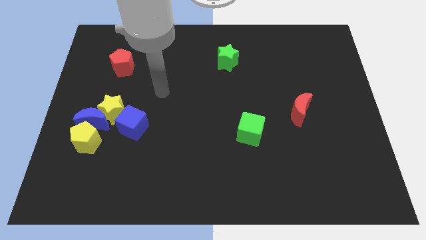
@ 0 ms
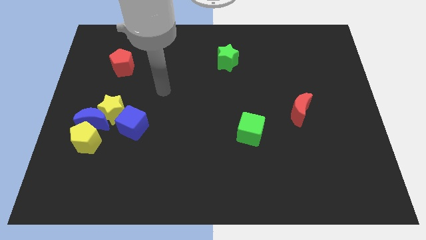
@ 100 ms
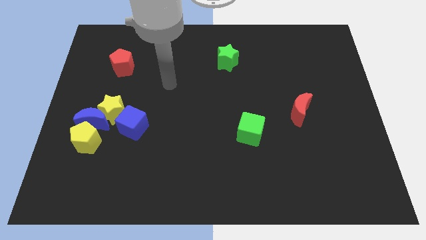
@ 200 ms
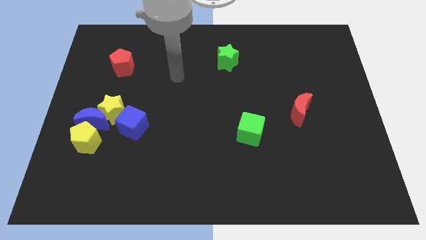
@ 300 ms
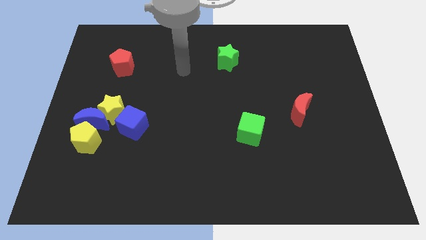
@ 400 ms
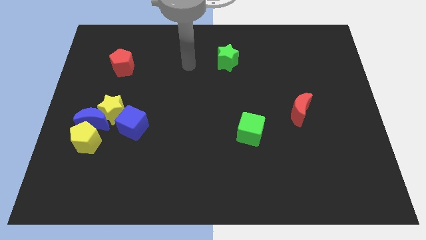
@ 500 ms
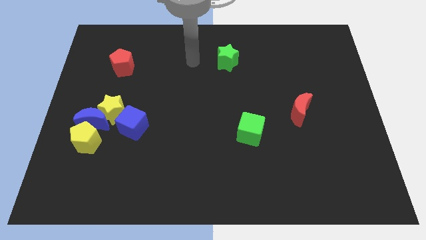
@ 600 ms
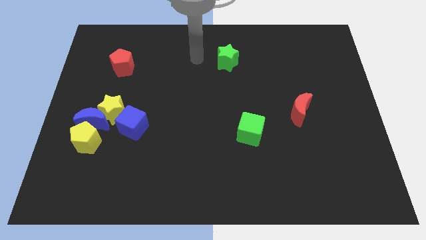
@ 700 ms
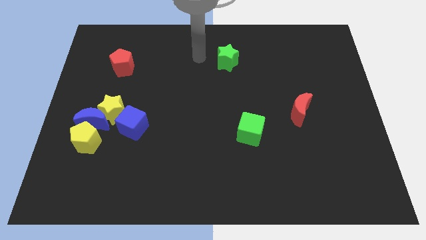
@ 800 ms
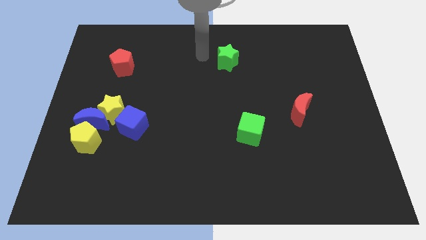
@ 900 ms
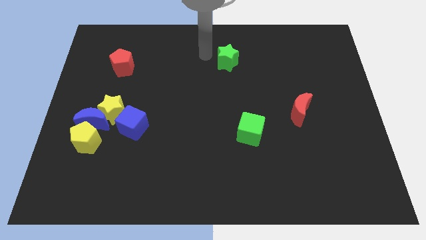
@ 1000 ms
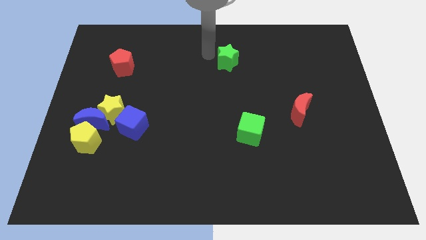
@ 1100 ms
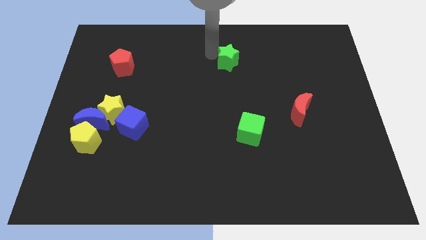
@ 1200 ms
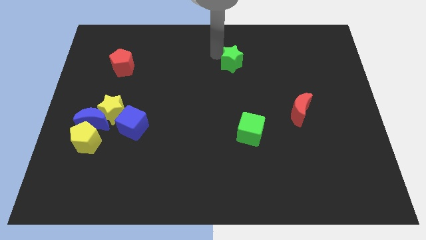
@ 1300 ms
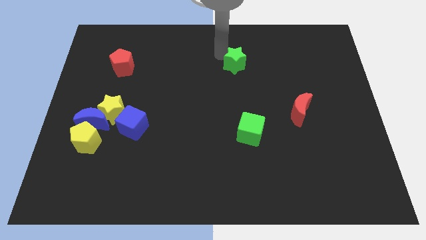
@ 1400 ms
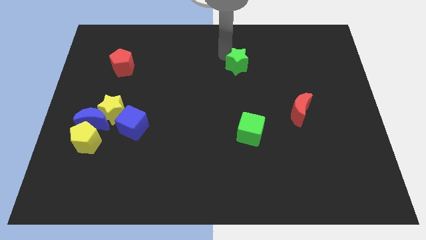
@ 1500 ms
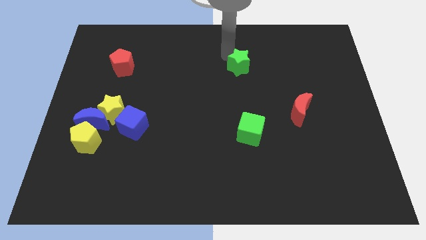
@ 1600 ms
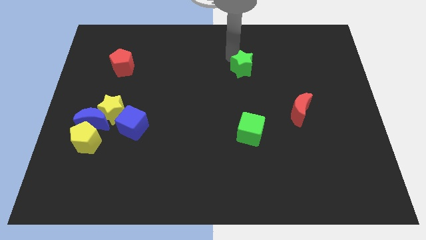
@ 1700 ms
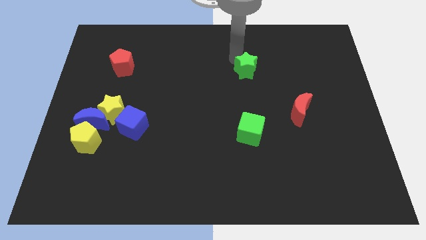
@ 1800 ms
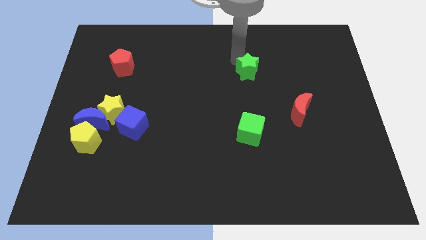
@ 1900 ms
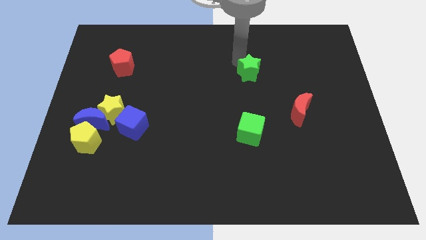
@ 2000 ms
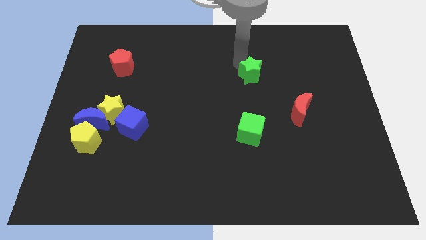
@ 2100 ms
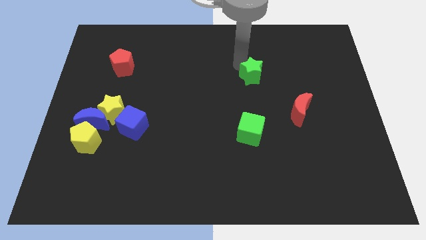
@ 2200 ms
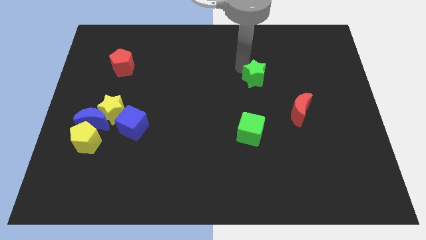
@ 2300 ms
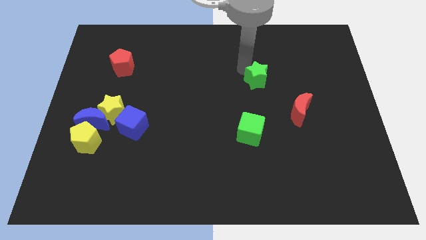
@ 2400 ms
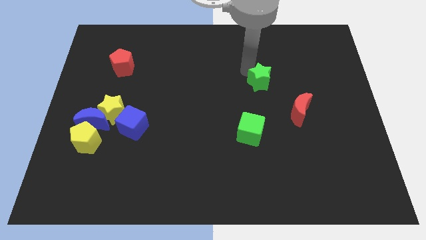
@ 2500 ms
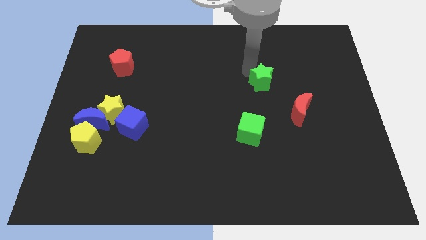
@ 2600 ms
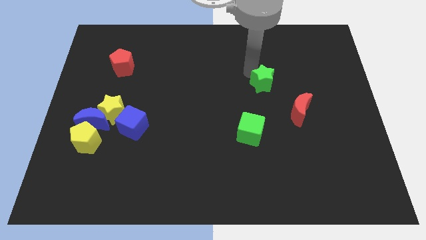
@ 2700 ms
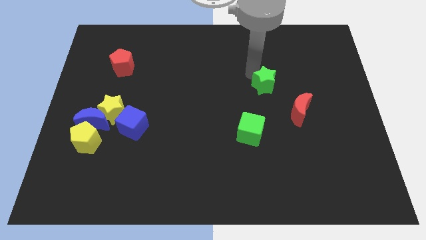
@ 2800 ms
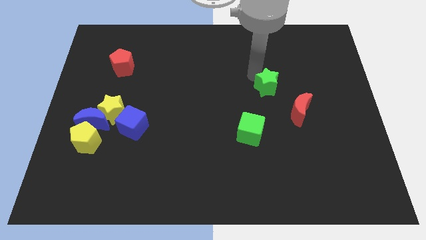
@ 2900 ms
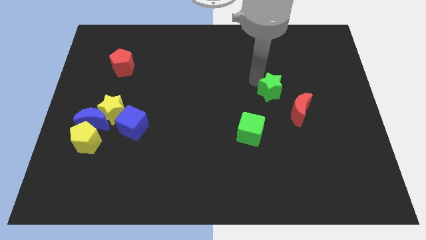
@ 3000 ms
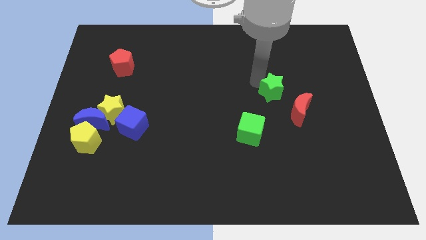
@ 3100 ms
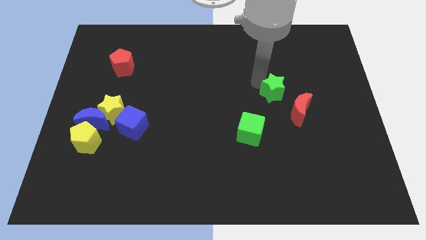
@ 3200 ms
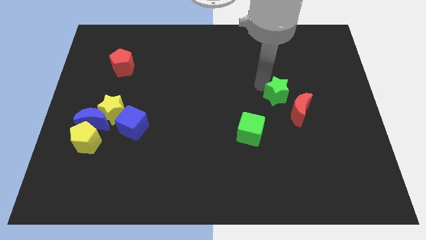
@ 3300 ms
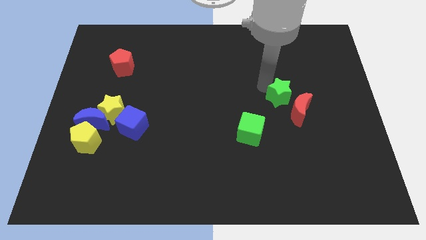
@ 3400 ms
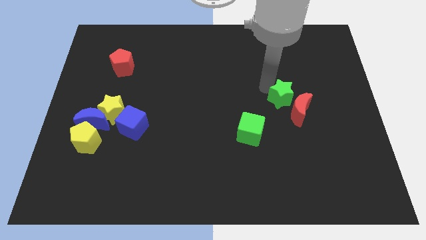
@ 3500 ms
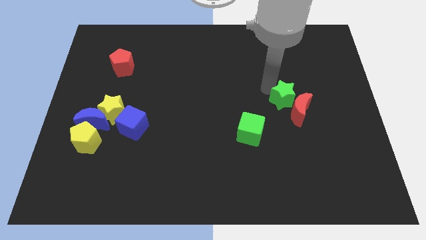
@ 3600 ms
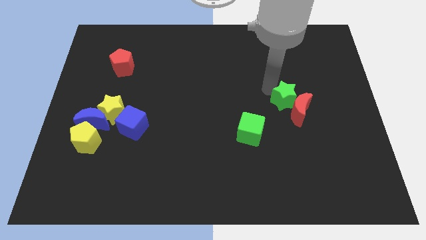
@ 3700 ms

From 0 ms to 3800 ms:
push the green star next to the red moon

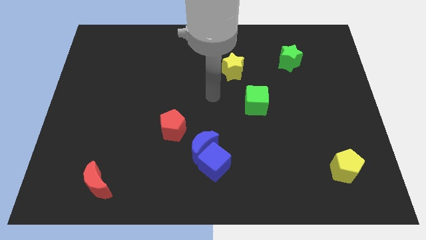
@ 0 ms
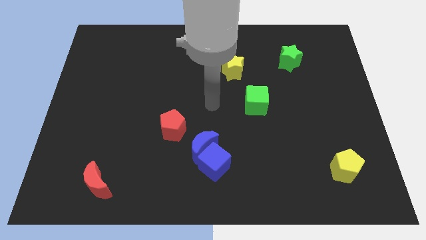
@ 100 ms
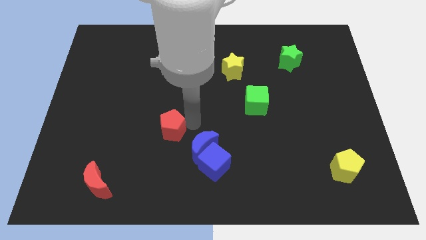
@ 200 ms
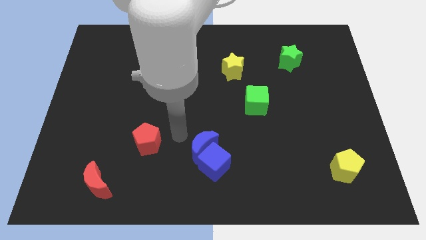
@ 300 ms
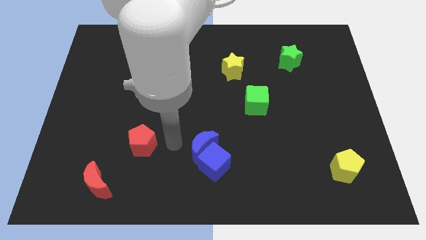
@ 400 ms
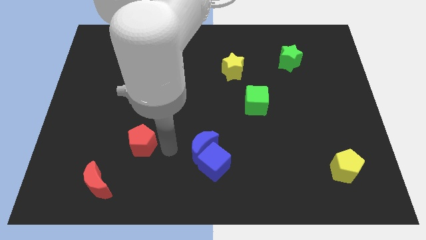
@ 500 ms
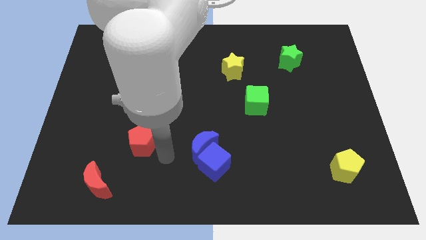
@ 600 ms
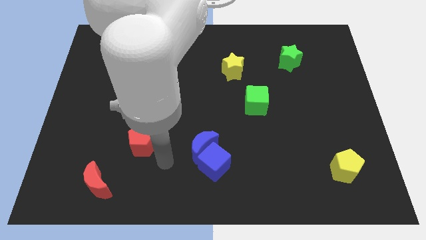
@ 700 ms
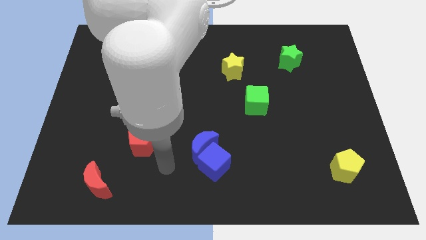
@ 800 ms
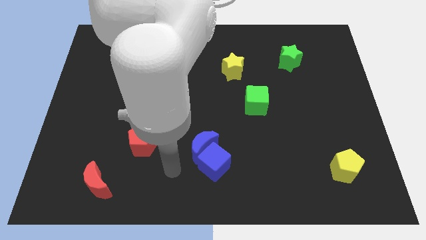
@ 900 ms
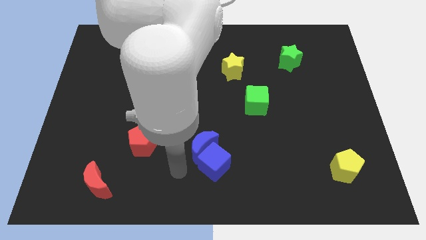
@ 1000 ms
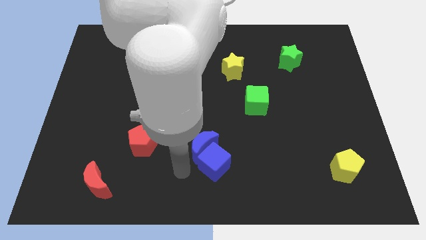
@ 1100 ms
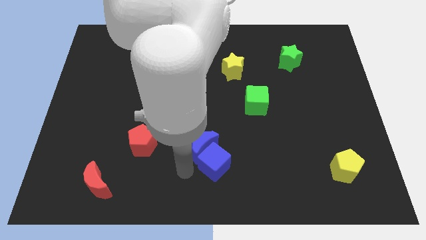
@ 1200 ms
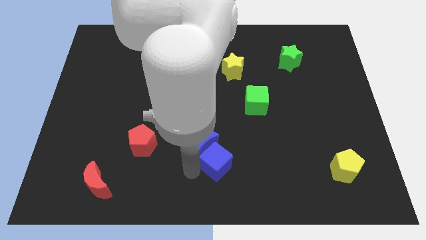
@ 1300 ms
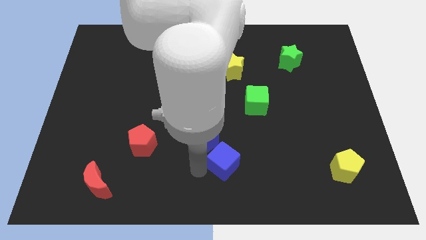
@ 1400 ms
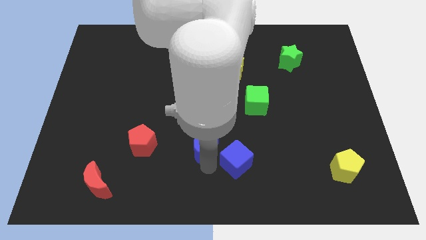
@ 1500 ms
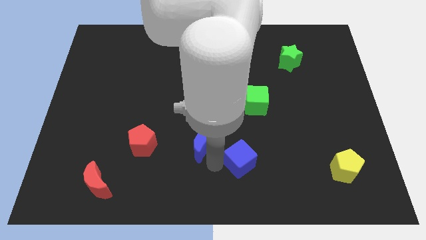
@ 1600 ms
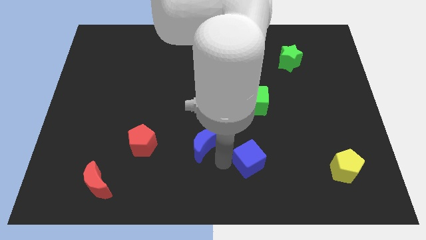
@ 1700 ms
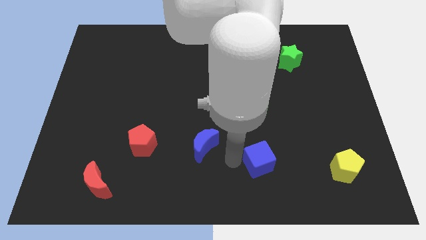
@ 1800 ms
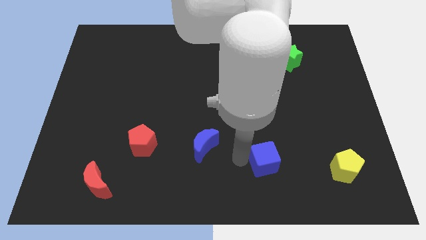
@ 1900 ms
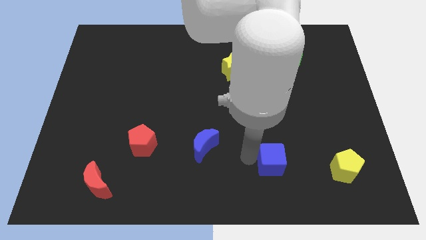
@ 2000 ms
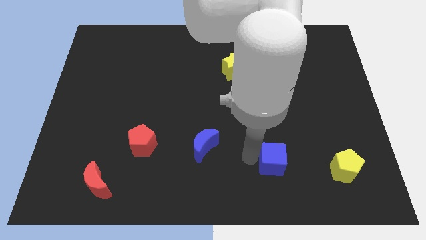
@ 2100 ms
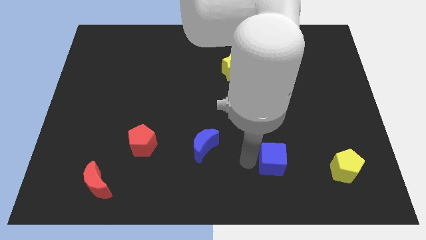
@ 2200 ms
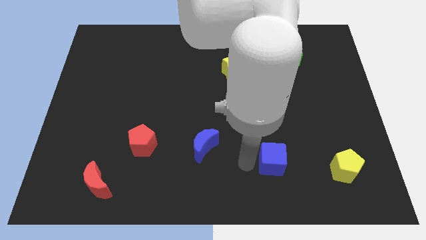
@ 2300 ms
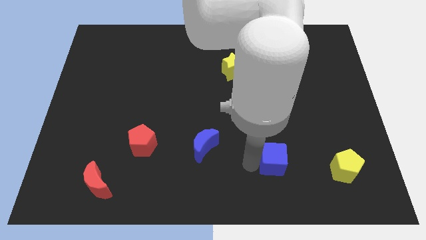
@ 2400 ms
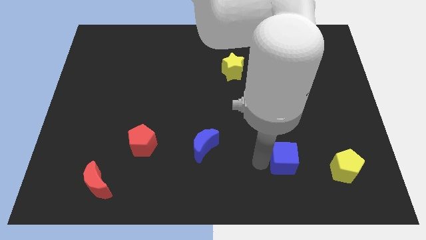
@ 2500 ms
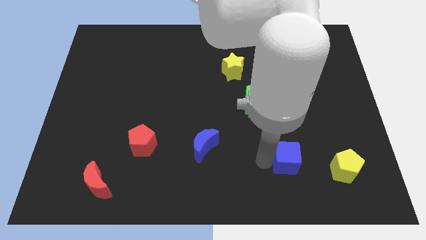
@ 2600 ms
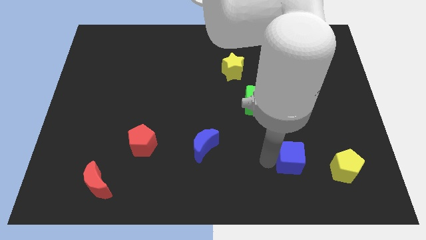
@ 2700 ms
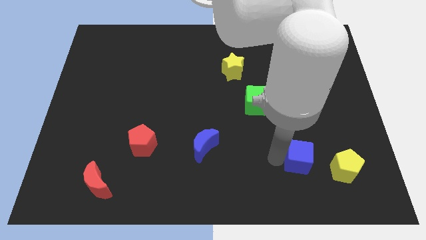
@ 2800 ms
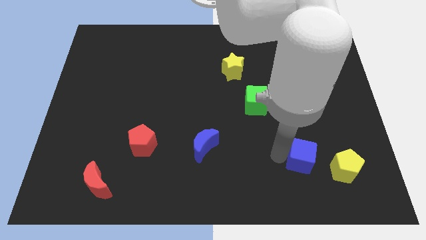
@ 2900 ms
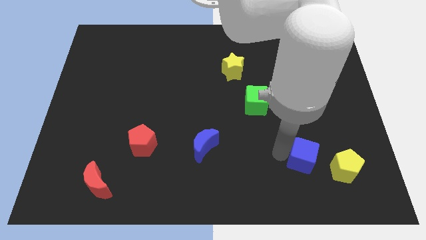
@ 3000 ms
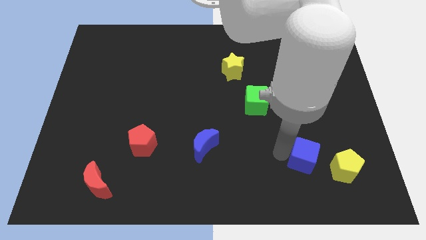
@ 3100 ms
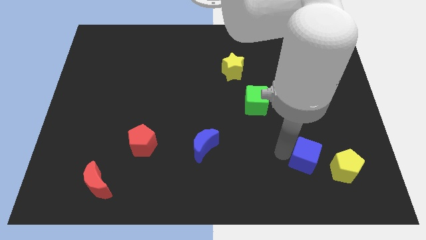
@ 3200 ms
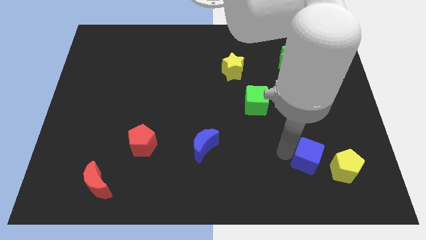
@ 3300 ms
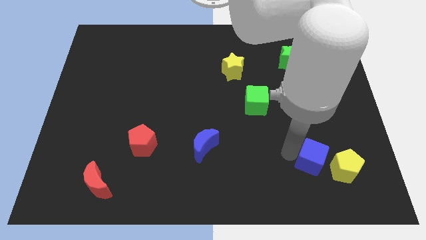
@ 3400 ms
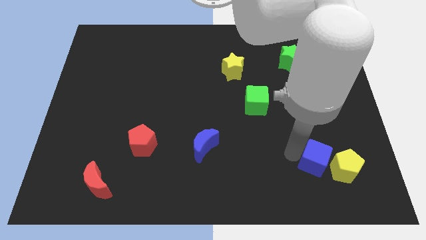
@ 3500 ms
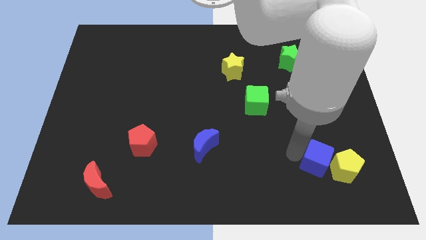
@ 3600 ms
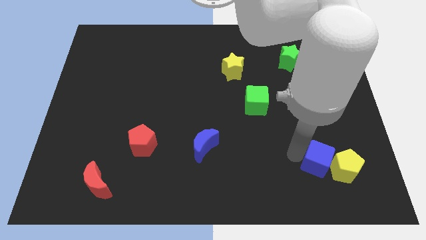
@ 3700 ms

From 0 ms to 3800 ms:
put the blue cube towards the yellow pentagon

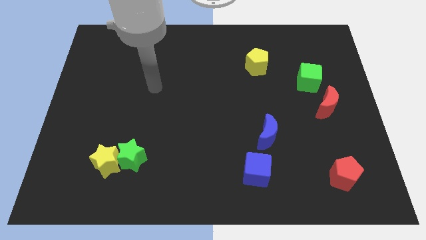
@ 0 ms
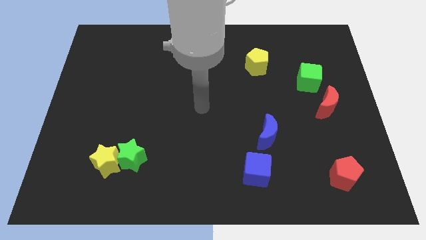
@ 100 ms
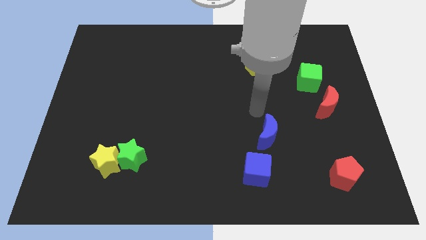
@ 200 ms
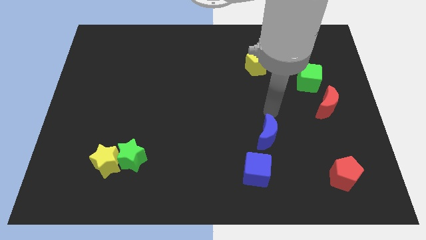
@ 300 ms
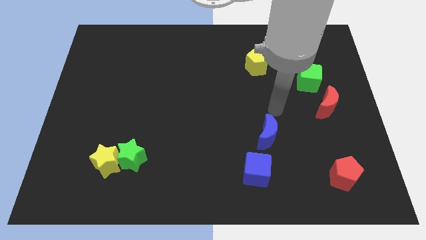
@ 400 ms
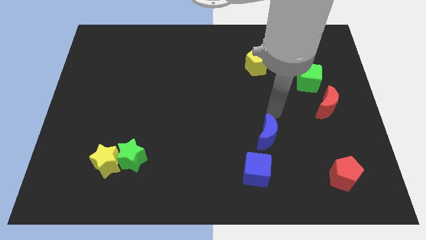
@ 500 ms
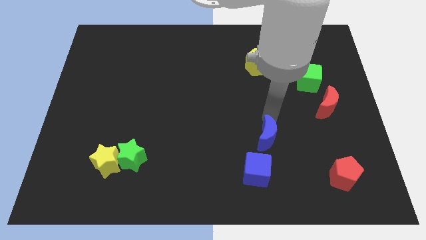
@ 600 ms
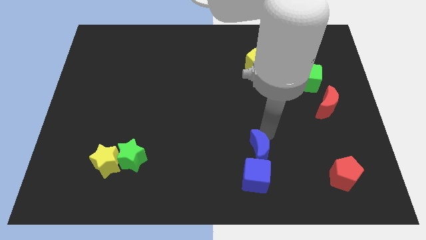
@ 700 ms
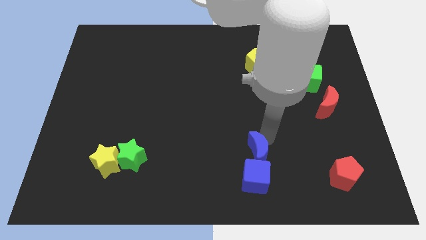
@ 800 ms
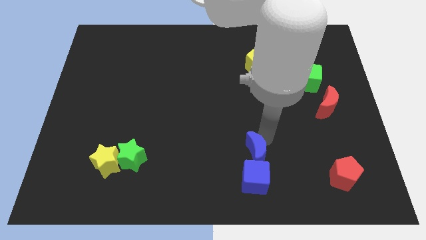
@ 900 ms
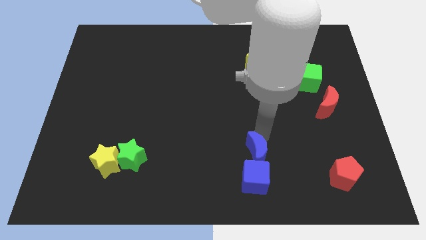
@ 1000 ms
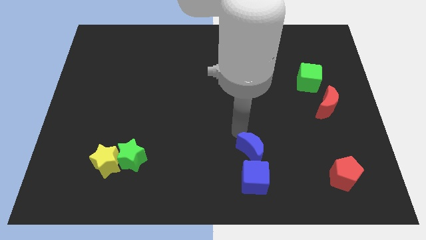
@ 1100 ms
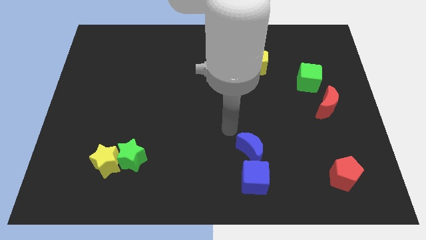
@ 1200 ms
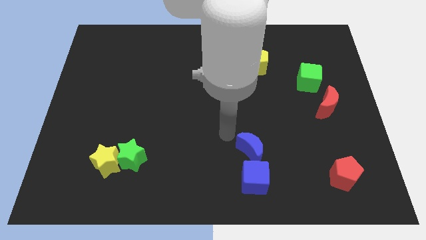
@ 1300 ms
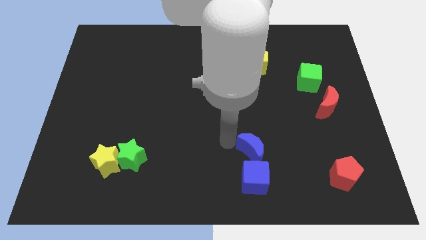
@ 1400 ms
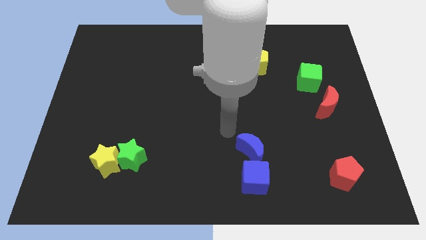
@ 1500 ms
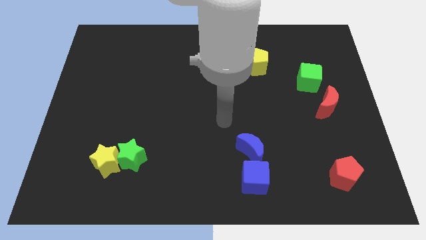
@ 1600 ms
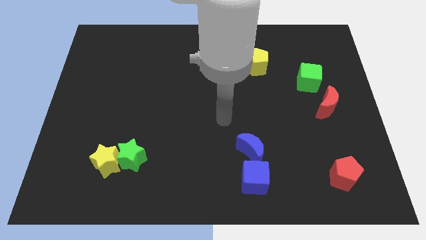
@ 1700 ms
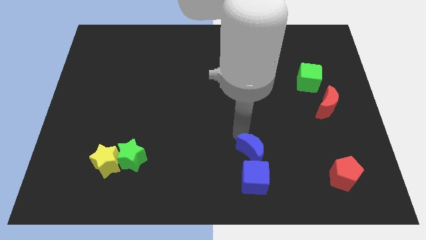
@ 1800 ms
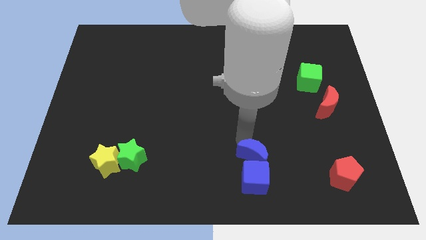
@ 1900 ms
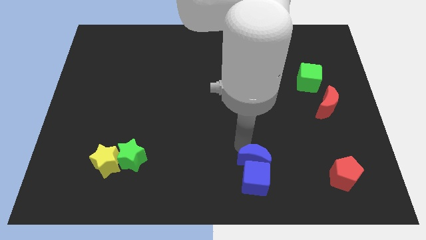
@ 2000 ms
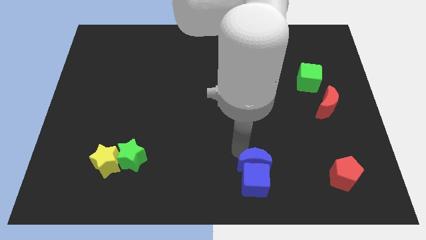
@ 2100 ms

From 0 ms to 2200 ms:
put the blue moon next to the blue cube
